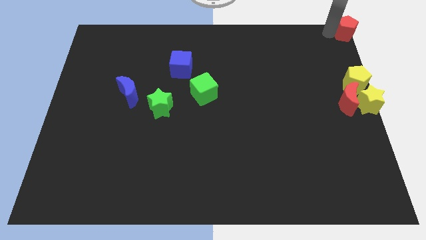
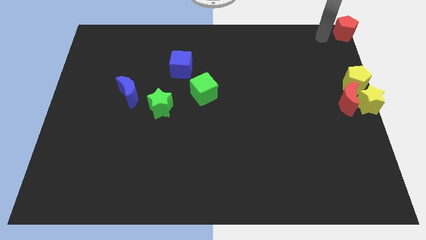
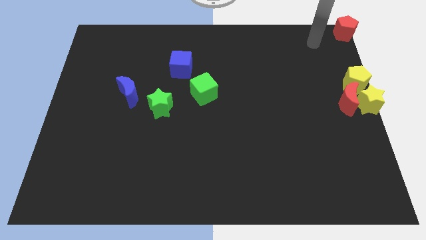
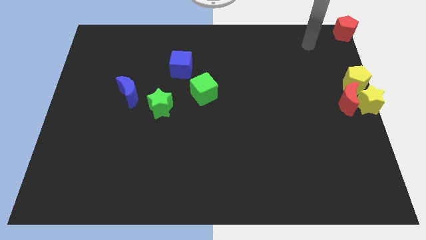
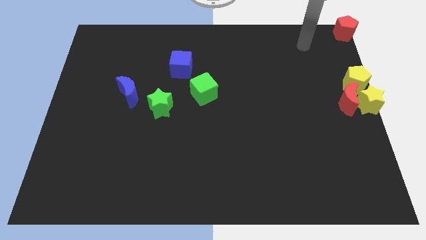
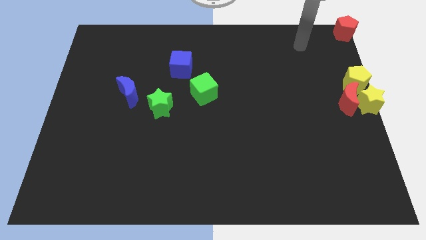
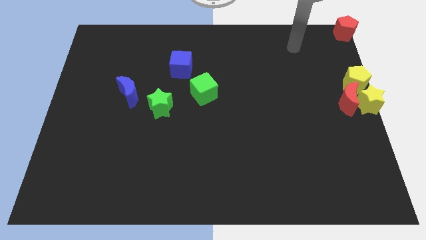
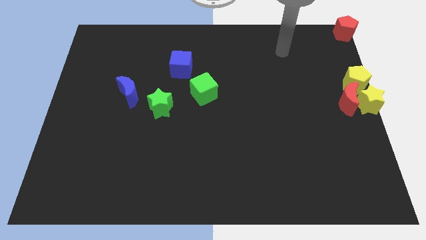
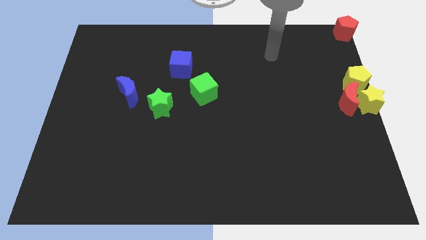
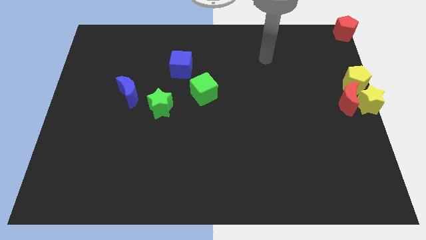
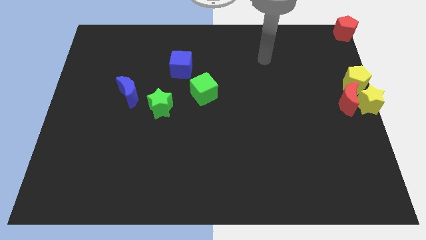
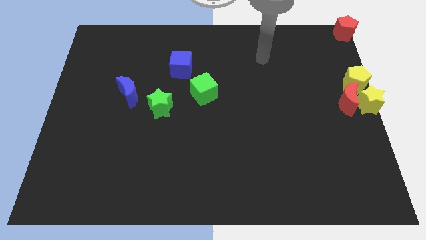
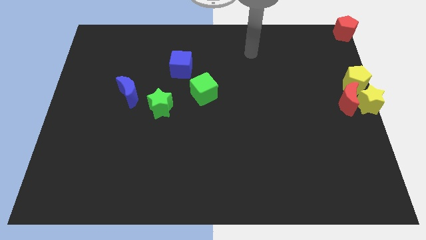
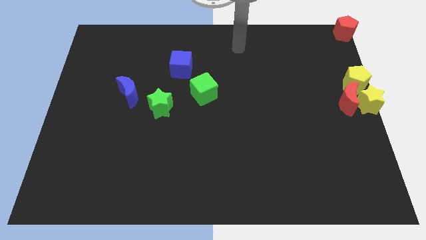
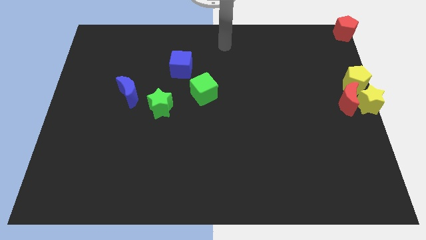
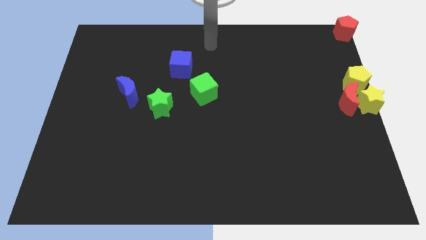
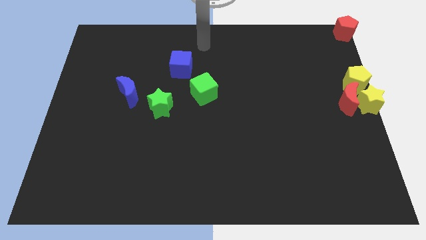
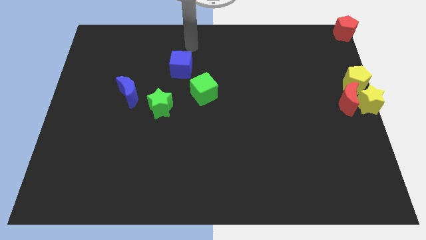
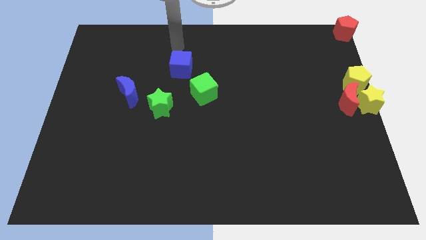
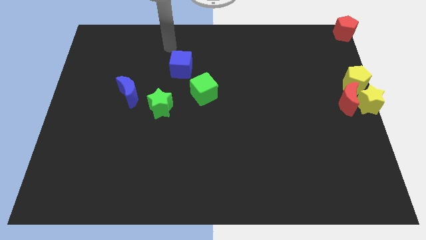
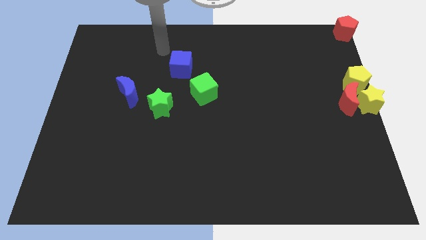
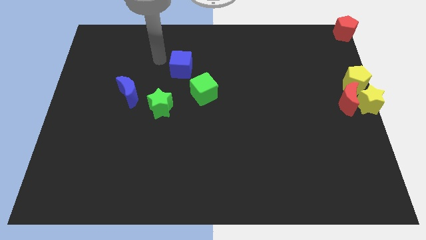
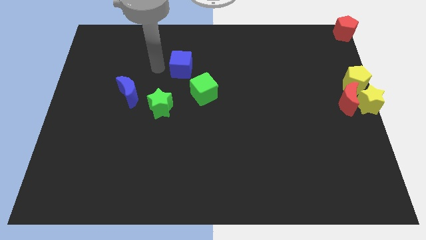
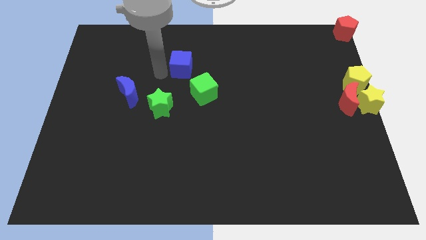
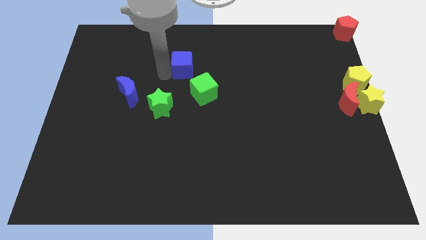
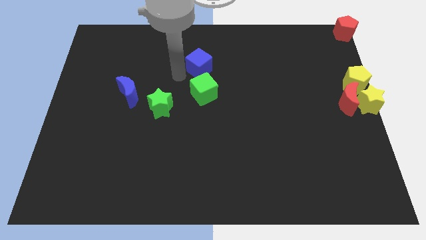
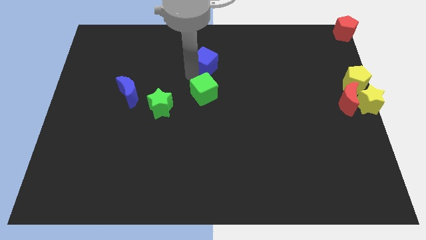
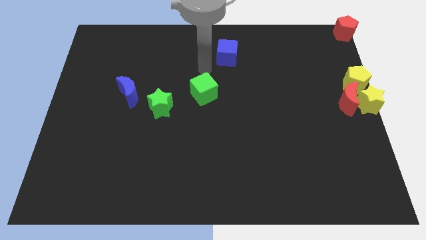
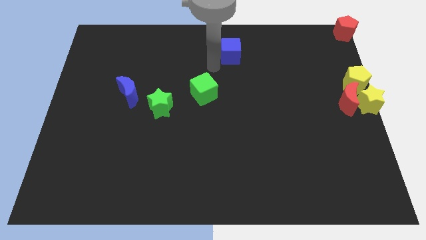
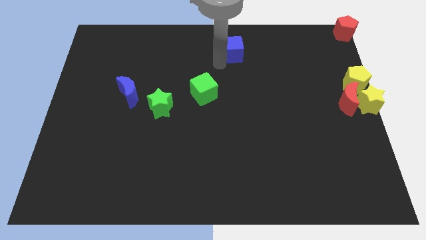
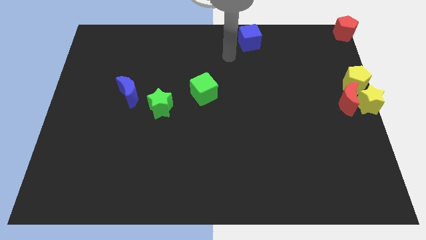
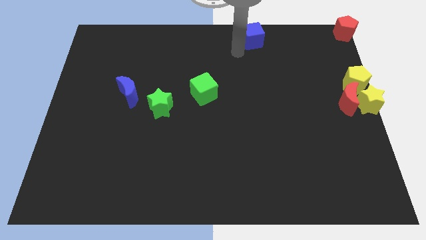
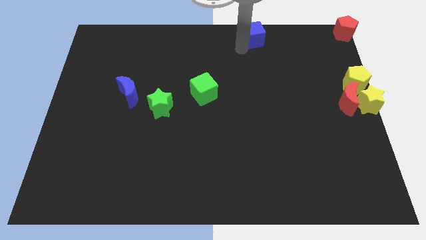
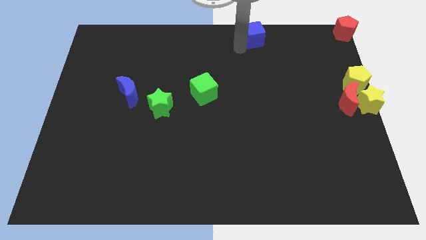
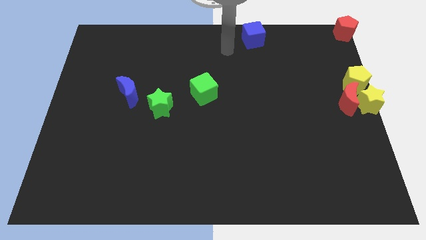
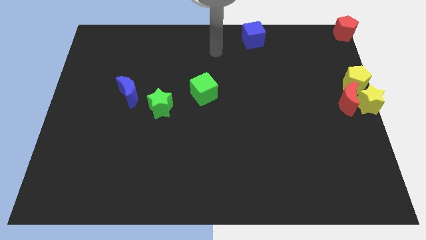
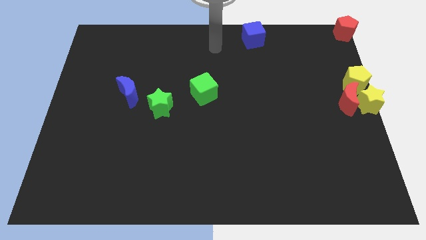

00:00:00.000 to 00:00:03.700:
push the blue cube towards the top side of the board

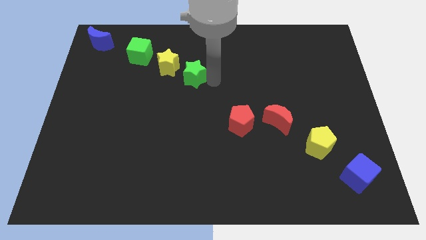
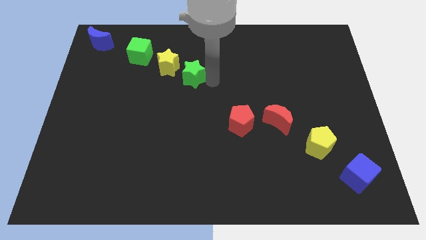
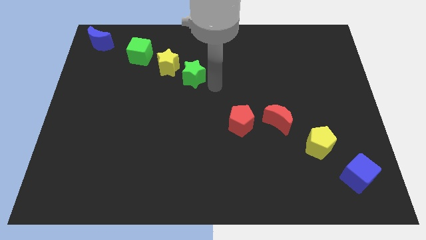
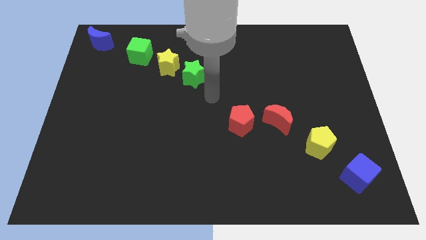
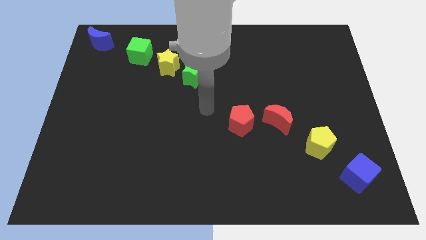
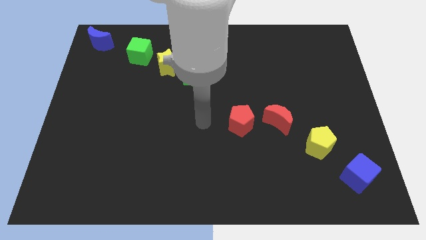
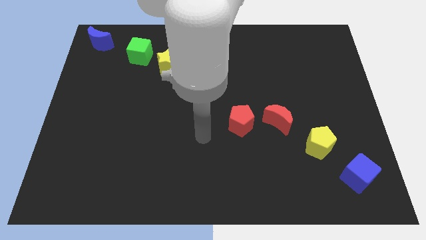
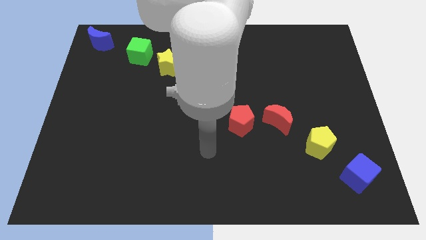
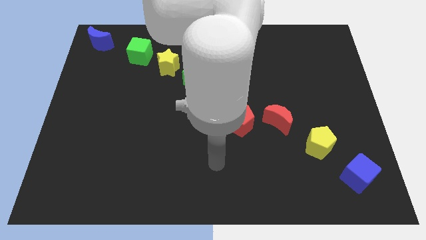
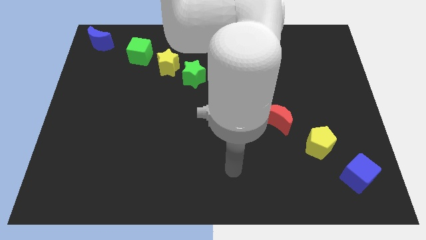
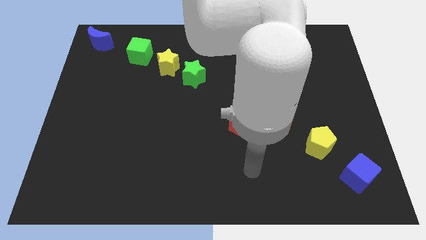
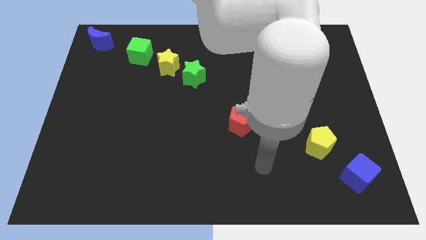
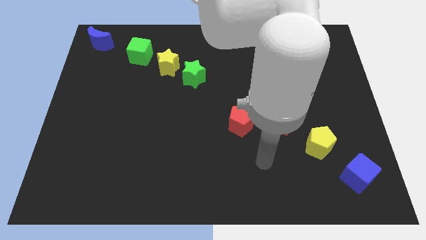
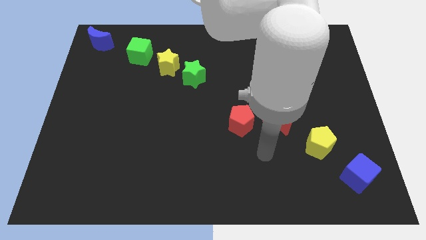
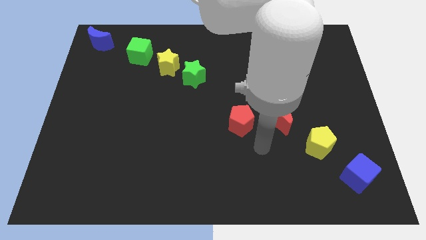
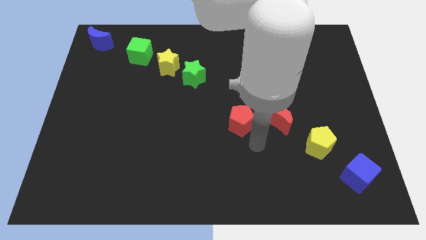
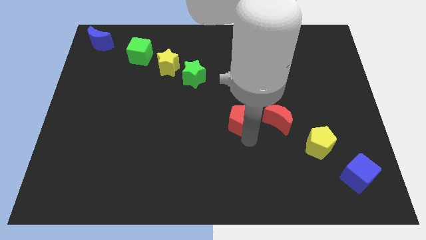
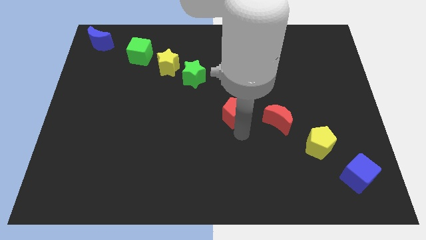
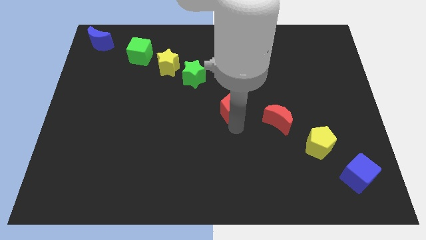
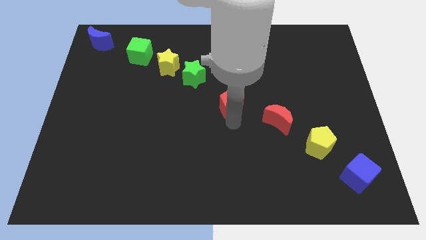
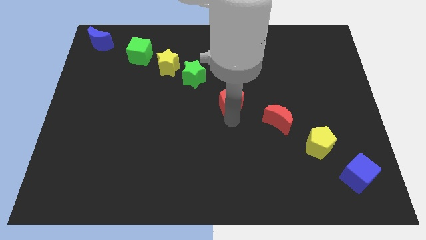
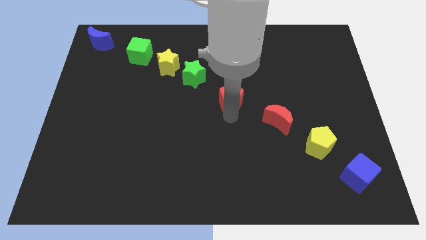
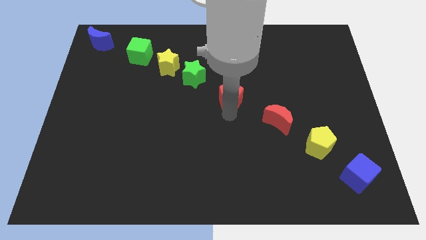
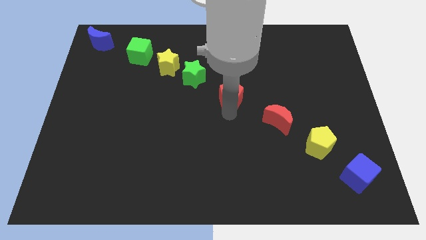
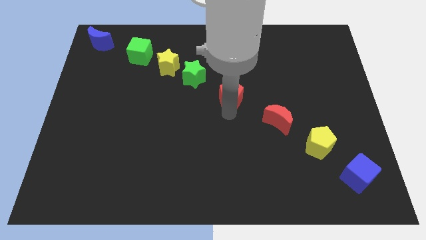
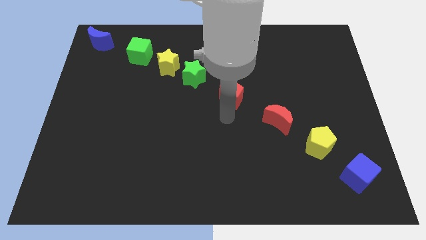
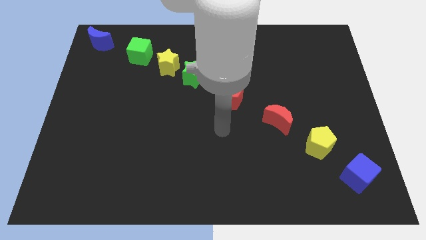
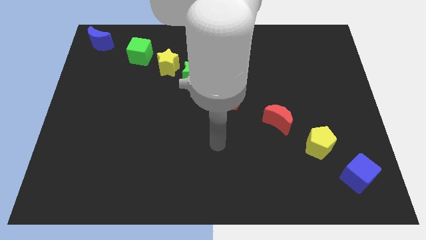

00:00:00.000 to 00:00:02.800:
place red pentagon between green star and red moon

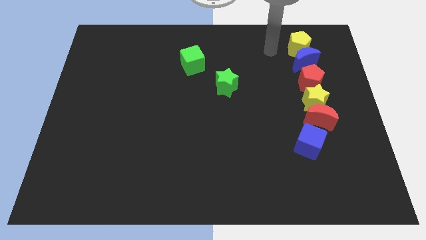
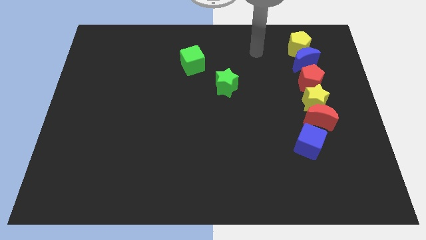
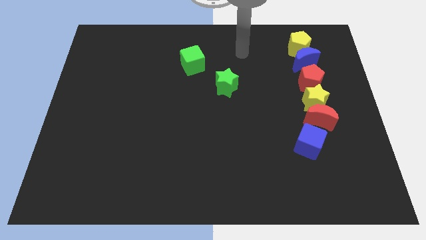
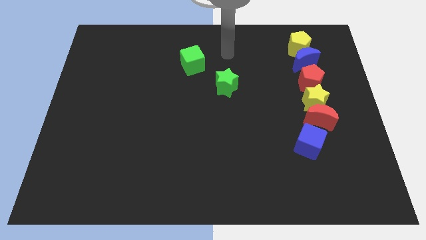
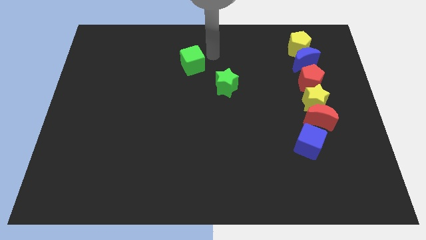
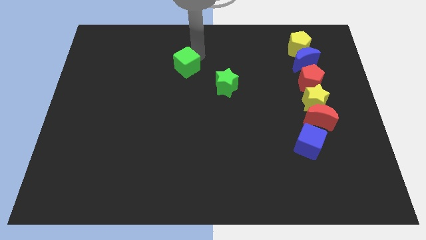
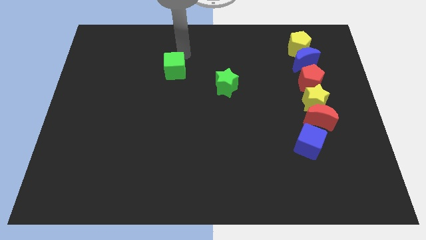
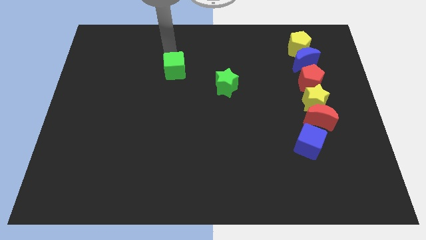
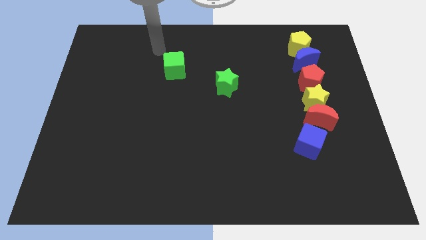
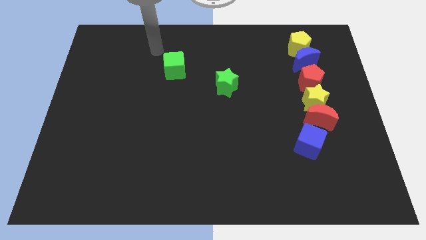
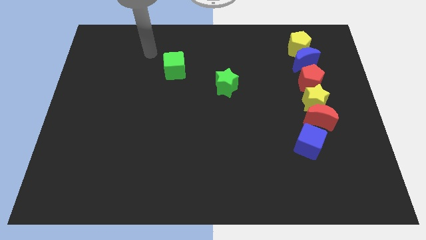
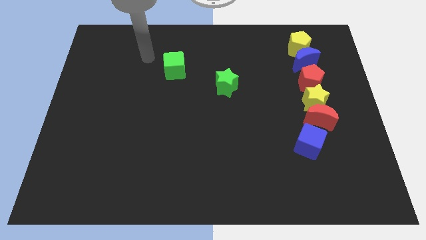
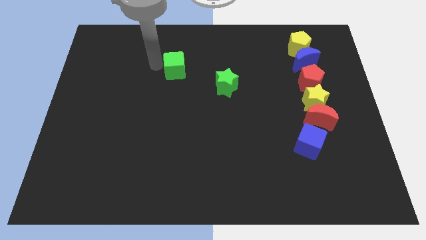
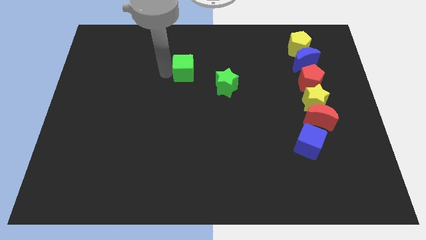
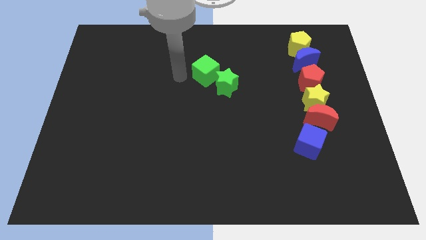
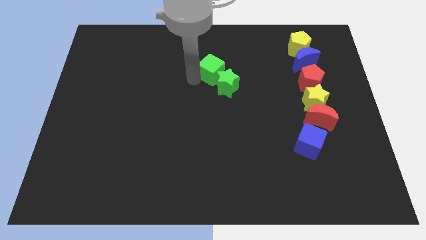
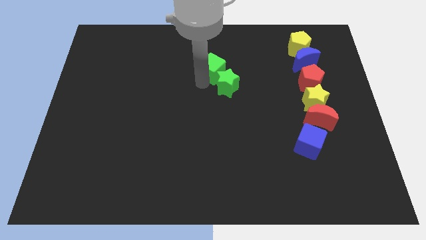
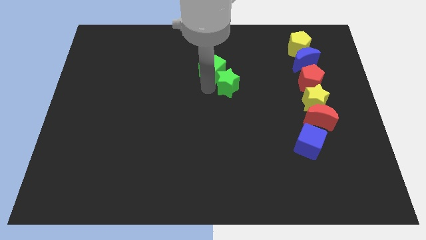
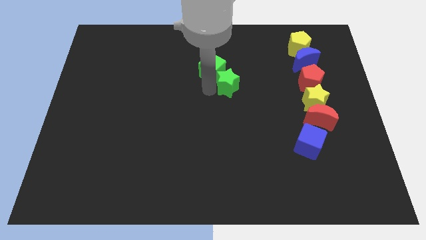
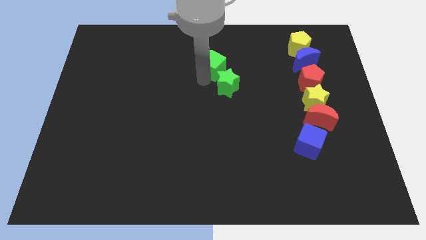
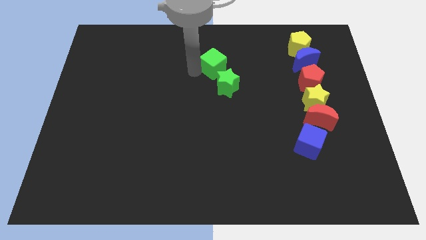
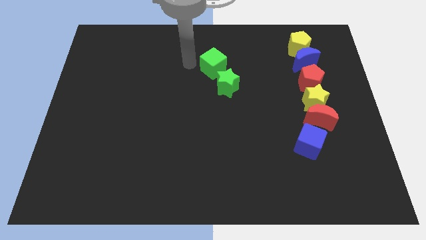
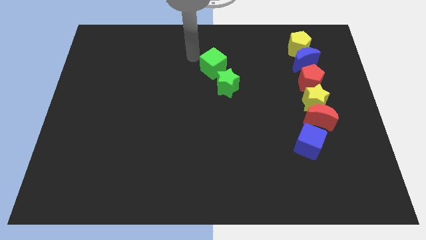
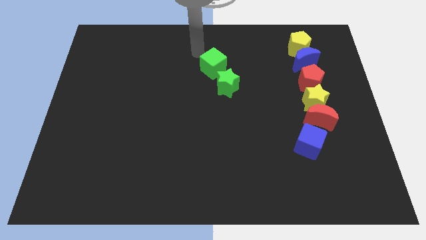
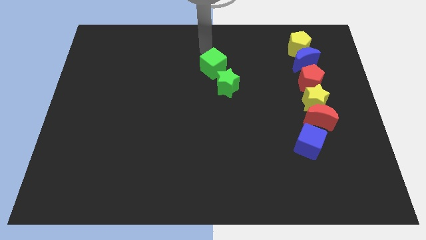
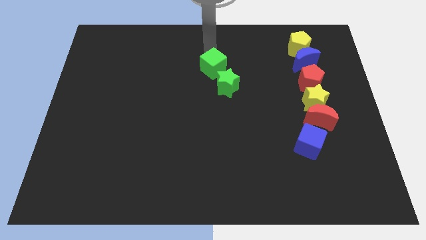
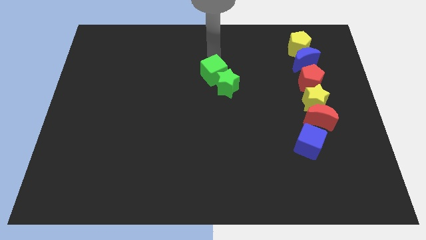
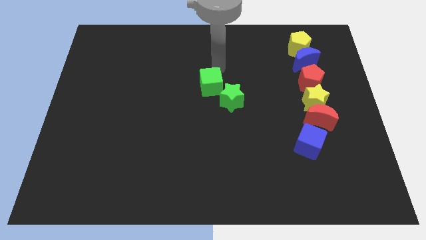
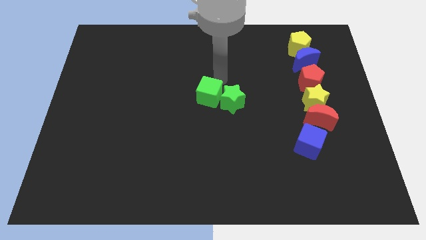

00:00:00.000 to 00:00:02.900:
push the green cube into the green star
